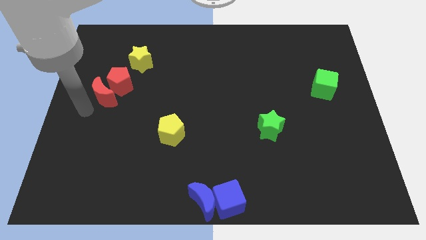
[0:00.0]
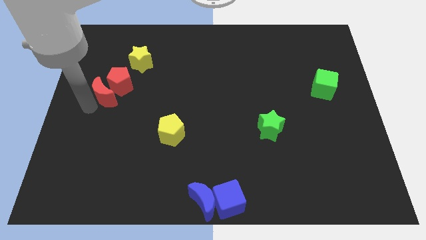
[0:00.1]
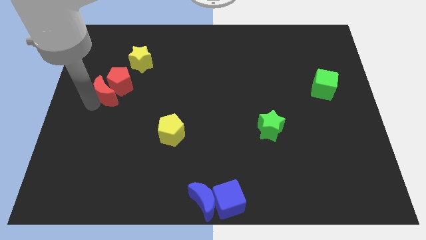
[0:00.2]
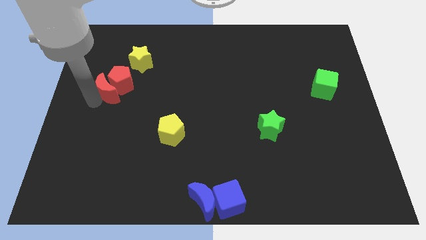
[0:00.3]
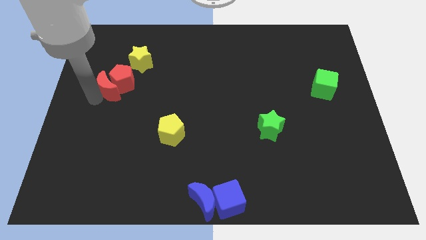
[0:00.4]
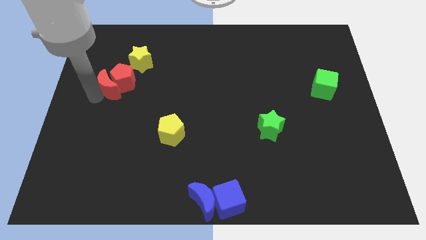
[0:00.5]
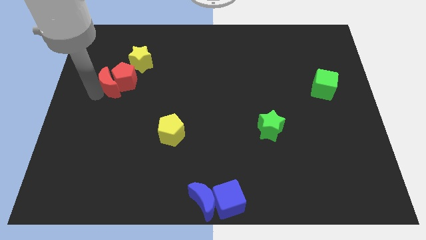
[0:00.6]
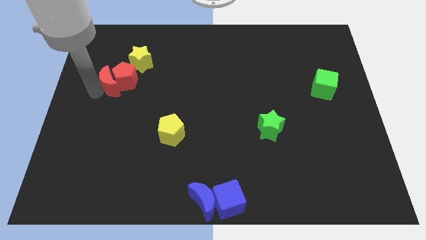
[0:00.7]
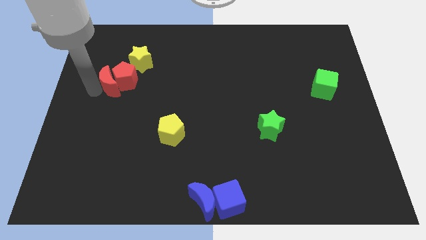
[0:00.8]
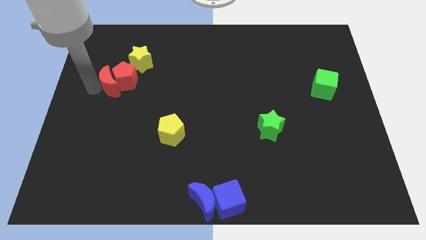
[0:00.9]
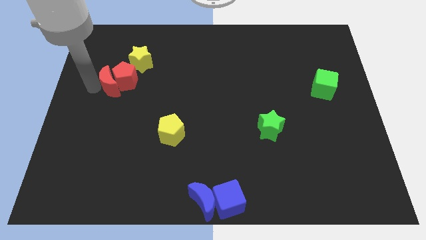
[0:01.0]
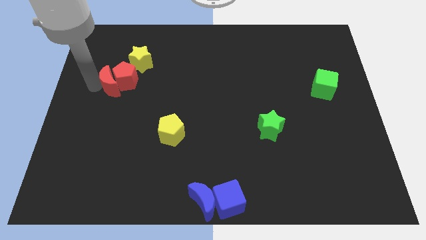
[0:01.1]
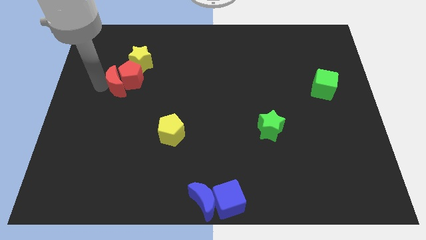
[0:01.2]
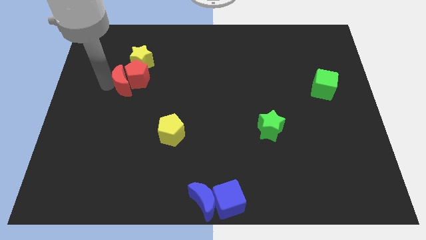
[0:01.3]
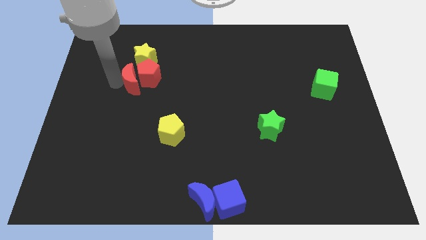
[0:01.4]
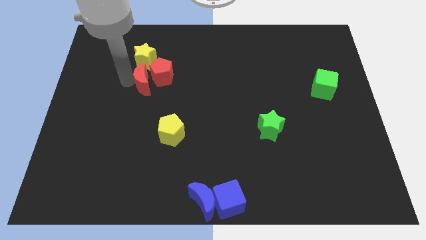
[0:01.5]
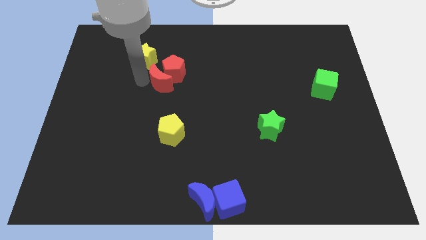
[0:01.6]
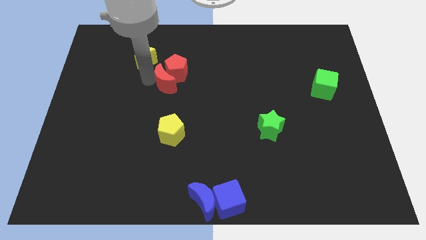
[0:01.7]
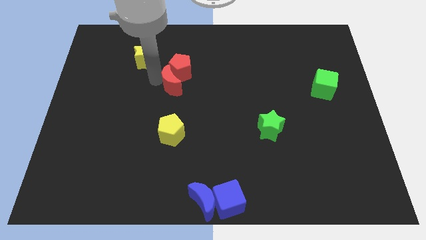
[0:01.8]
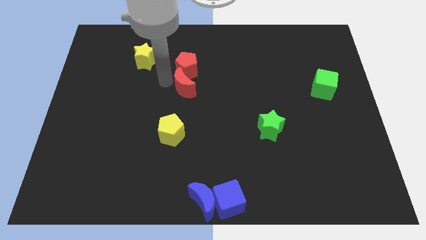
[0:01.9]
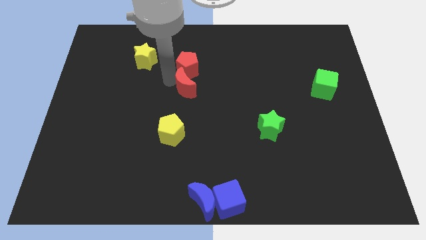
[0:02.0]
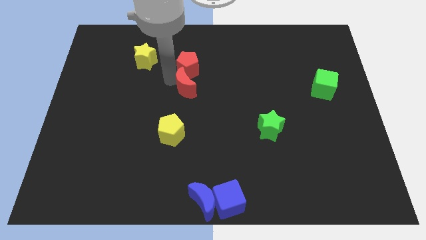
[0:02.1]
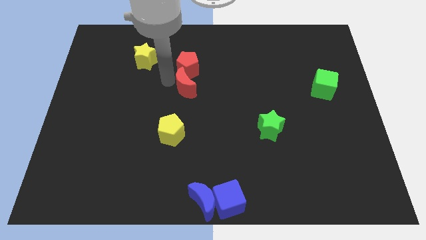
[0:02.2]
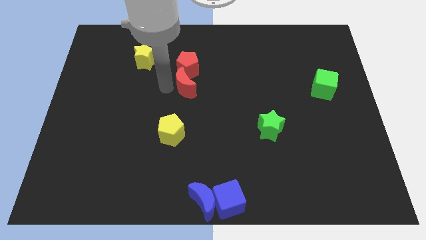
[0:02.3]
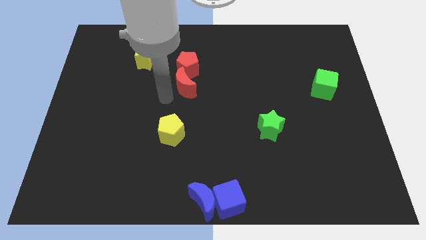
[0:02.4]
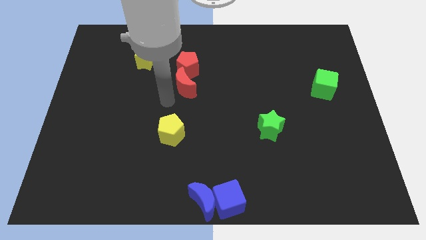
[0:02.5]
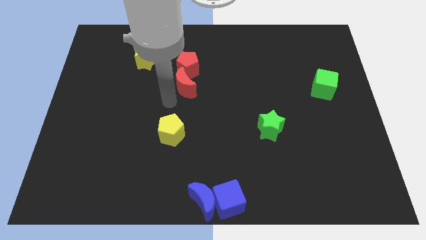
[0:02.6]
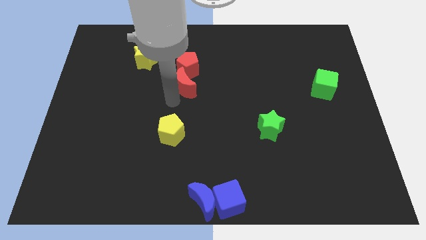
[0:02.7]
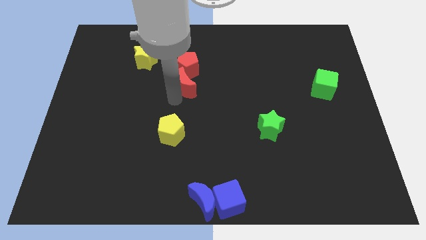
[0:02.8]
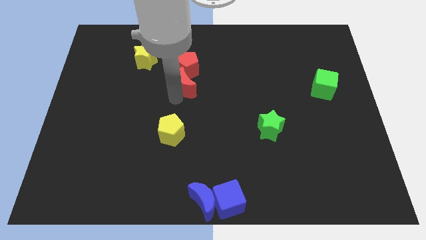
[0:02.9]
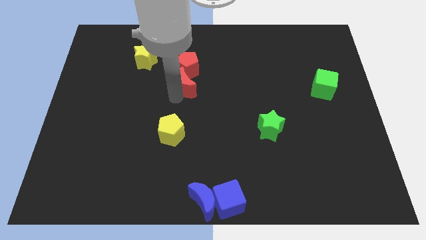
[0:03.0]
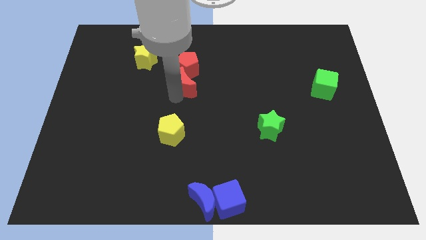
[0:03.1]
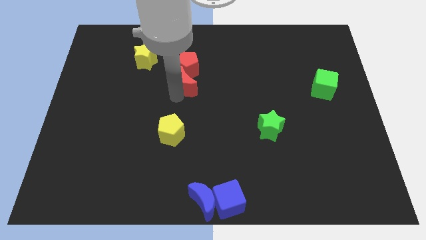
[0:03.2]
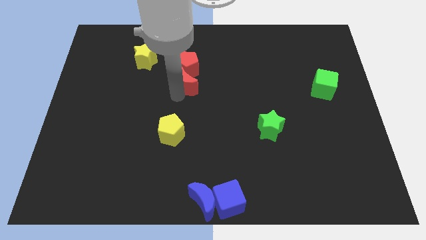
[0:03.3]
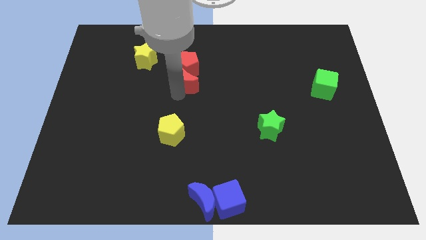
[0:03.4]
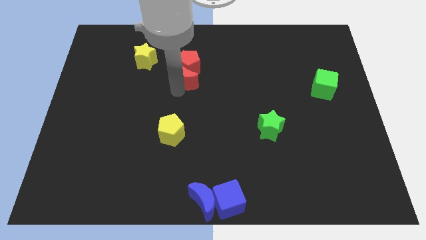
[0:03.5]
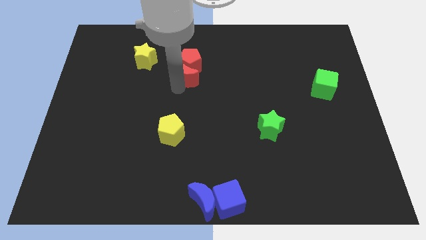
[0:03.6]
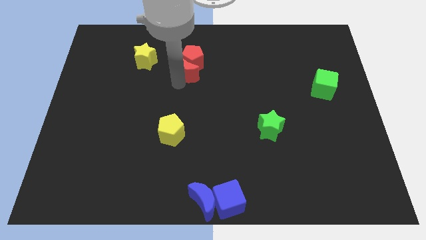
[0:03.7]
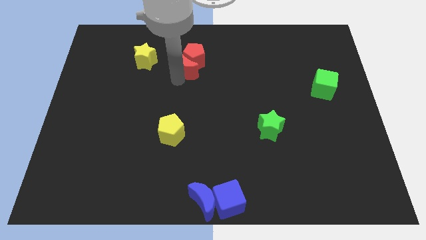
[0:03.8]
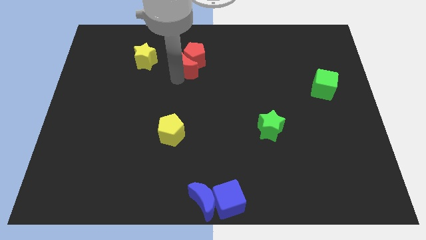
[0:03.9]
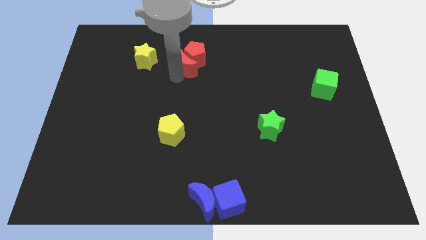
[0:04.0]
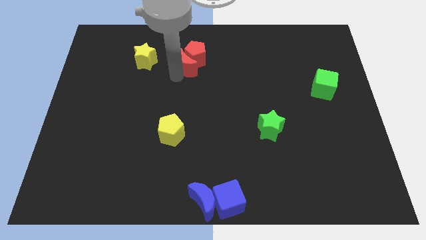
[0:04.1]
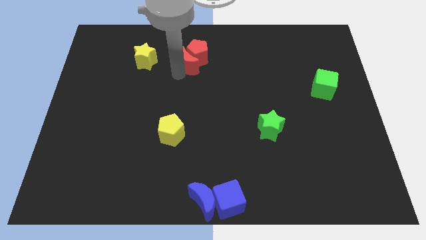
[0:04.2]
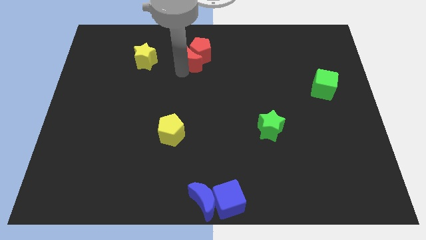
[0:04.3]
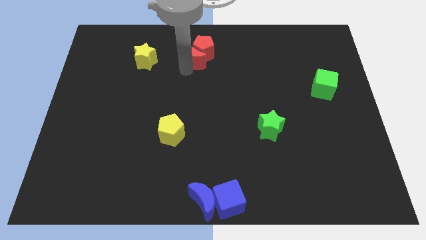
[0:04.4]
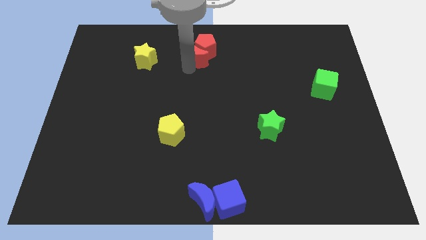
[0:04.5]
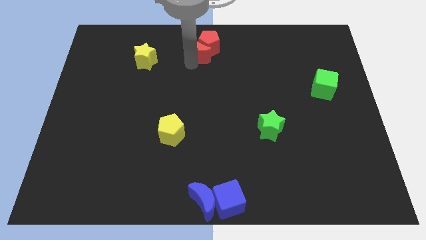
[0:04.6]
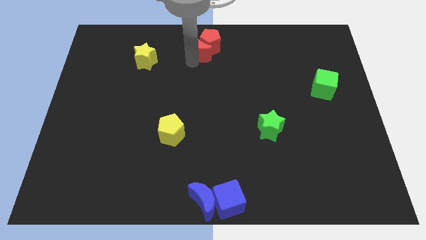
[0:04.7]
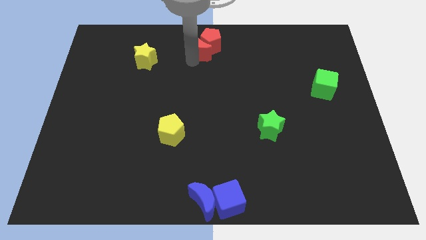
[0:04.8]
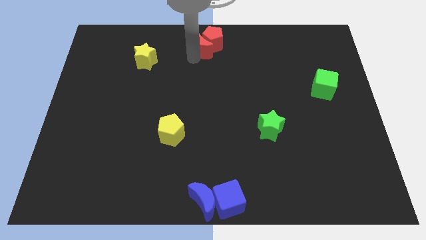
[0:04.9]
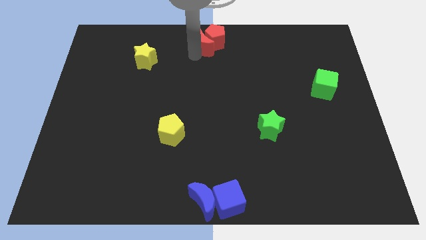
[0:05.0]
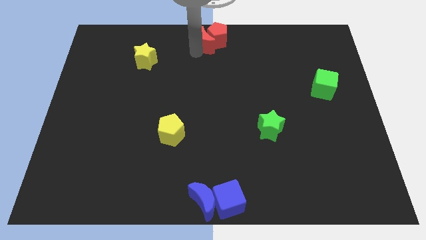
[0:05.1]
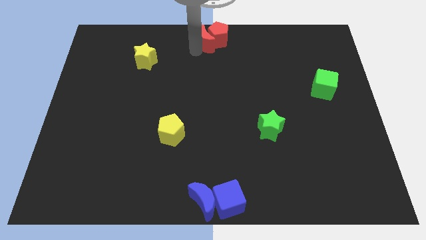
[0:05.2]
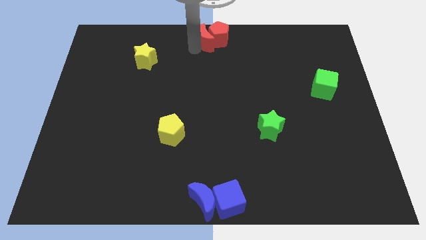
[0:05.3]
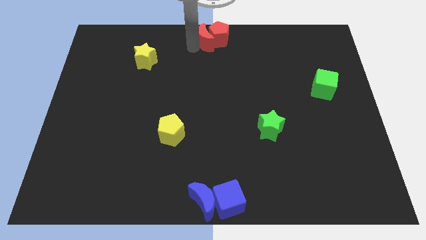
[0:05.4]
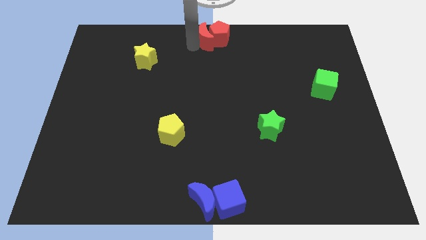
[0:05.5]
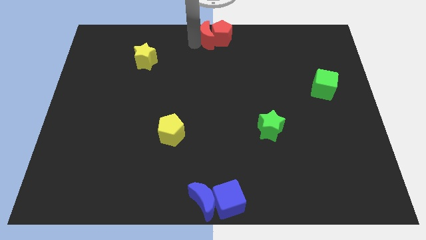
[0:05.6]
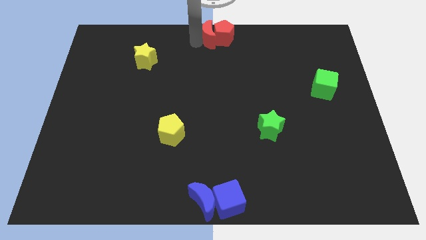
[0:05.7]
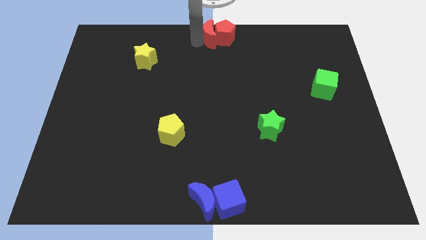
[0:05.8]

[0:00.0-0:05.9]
move the red crescent and red pentagon towards the top cener

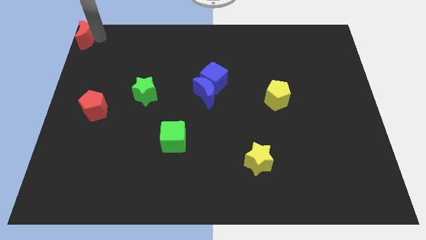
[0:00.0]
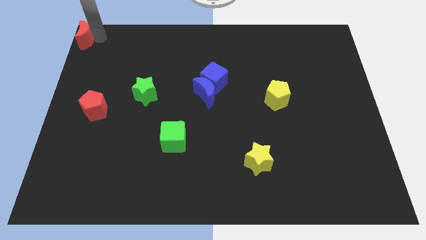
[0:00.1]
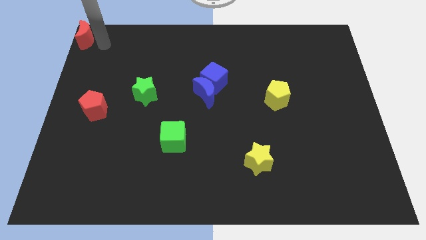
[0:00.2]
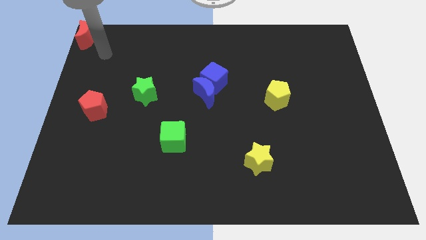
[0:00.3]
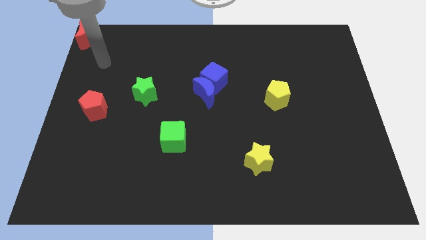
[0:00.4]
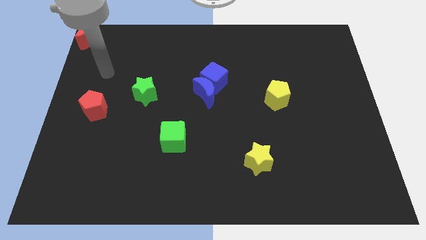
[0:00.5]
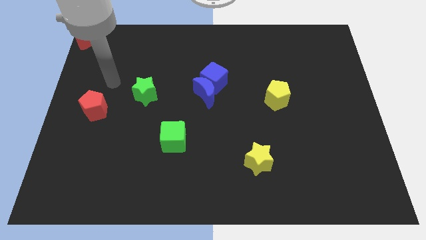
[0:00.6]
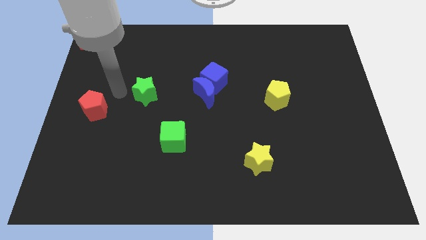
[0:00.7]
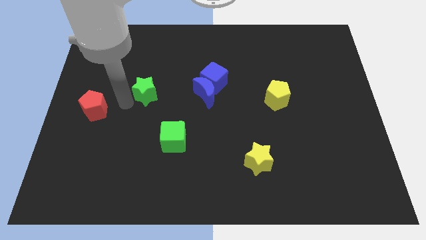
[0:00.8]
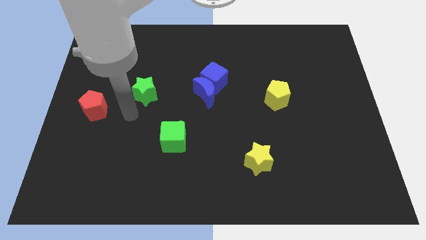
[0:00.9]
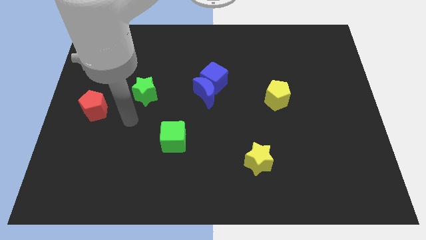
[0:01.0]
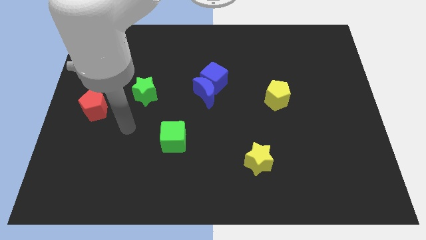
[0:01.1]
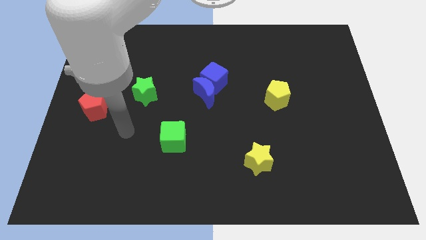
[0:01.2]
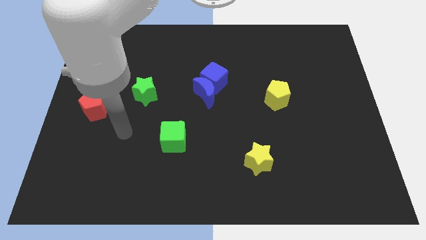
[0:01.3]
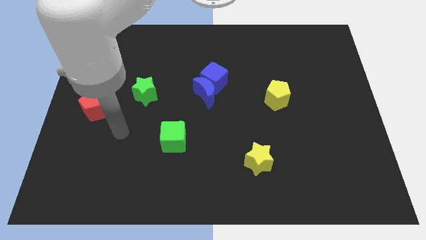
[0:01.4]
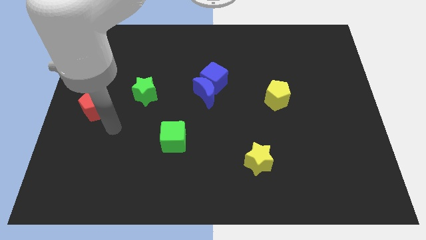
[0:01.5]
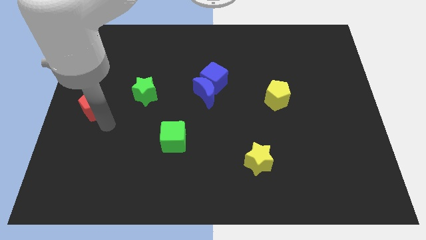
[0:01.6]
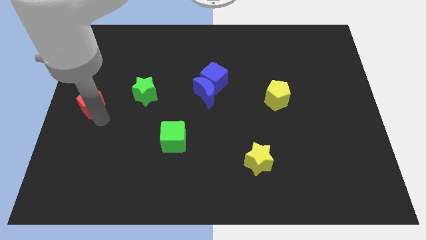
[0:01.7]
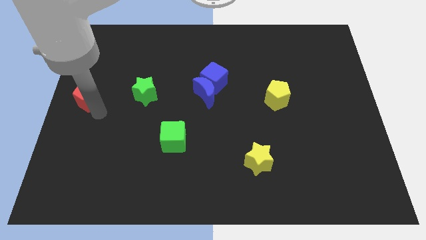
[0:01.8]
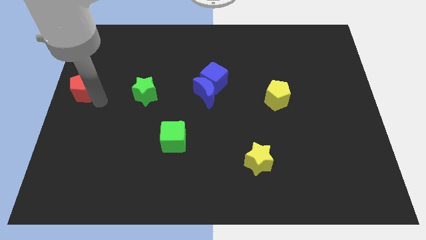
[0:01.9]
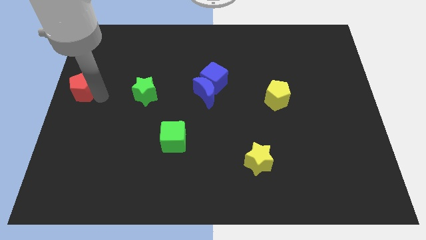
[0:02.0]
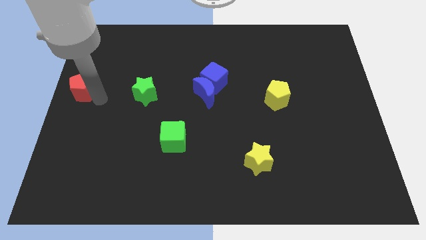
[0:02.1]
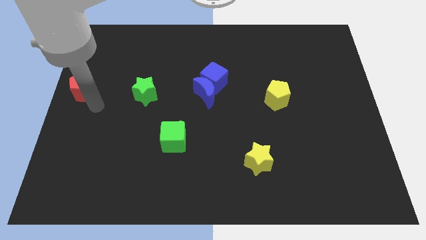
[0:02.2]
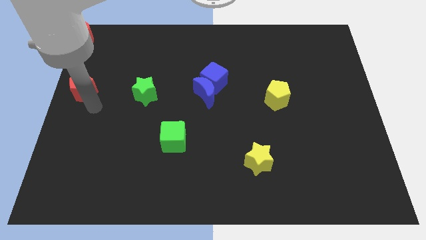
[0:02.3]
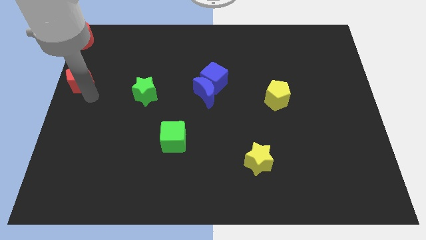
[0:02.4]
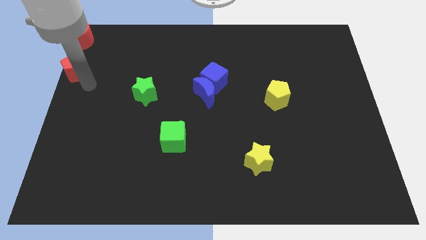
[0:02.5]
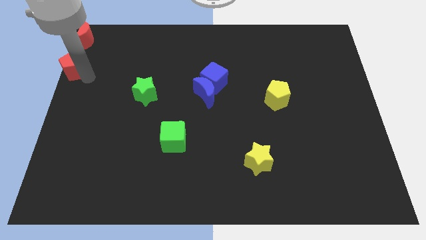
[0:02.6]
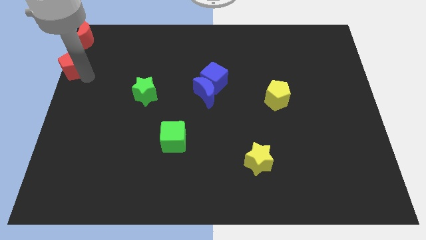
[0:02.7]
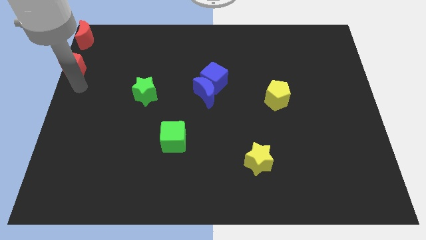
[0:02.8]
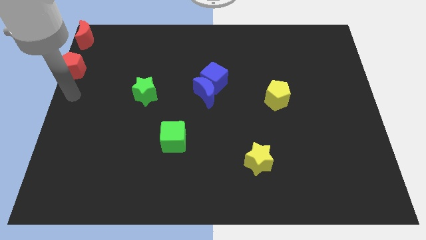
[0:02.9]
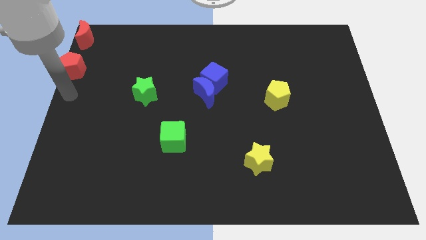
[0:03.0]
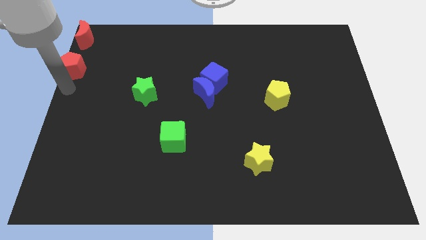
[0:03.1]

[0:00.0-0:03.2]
place the red pentagon below the red crescent
